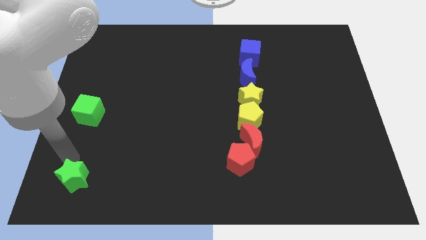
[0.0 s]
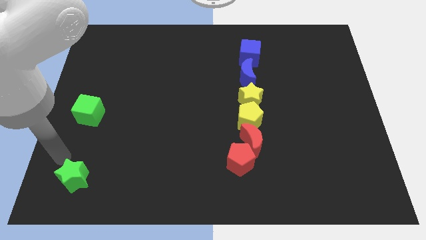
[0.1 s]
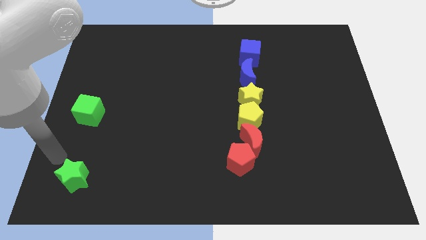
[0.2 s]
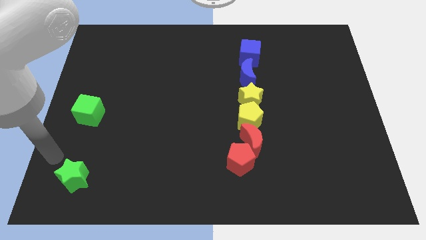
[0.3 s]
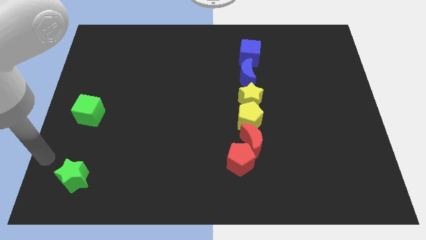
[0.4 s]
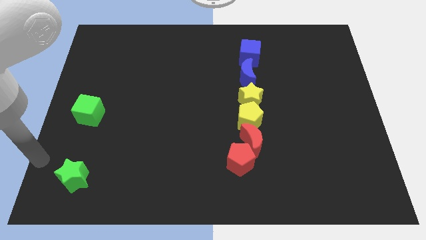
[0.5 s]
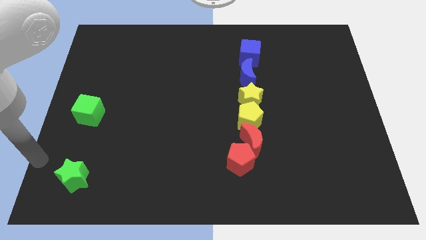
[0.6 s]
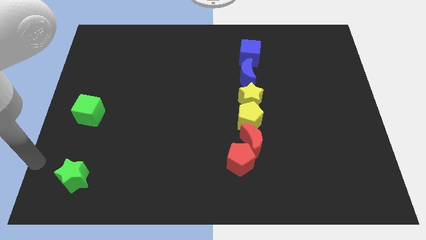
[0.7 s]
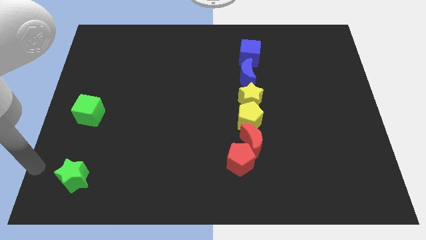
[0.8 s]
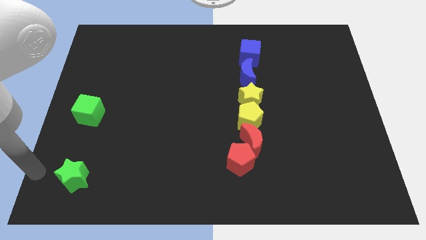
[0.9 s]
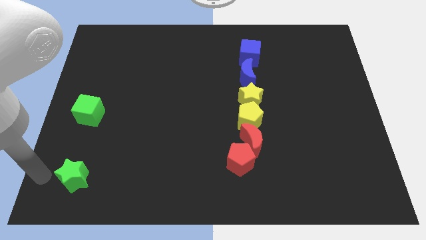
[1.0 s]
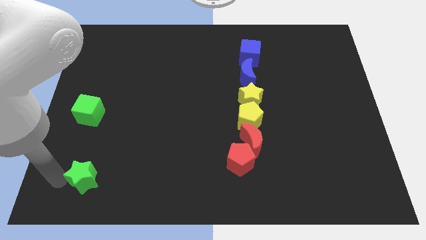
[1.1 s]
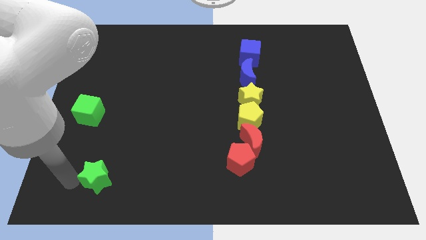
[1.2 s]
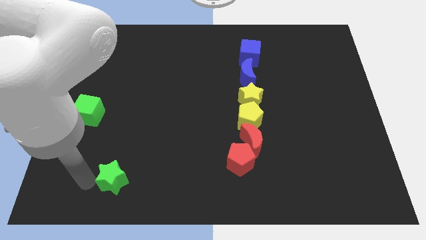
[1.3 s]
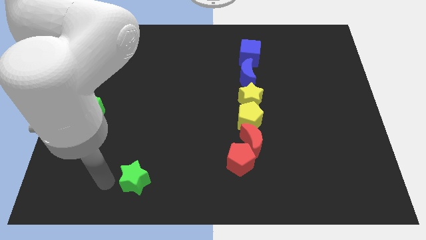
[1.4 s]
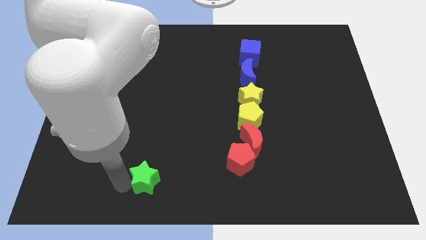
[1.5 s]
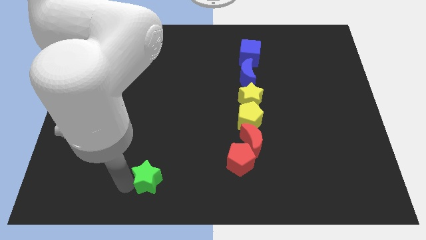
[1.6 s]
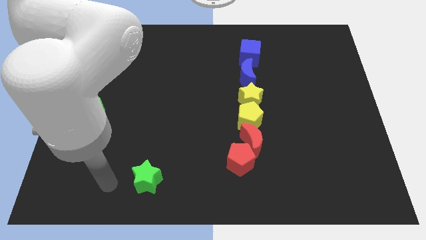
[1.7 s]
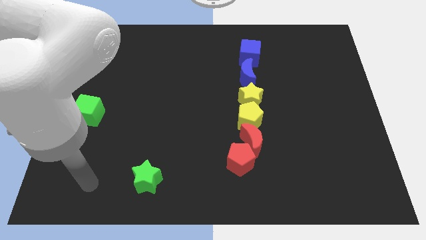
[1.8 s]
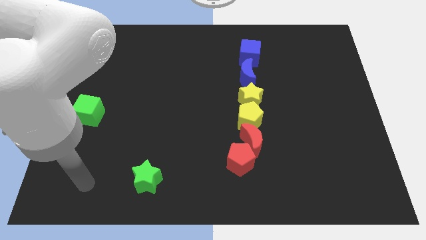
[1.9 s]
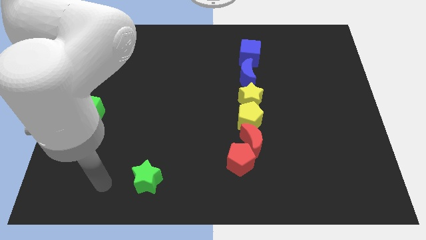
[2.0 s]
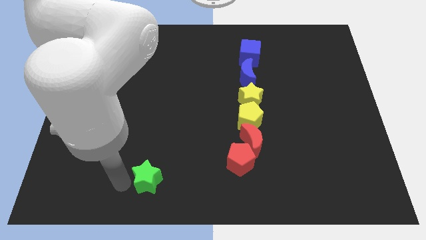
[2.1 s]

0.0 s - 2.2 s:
move the green sar to the bottom center

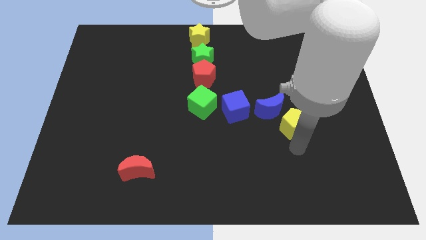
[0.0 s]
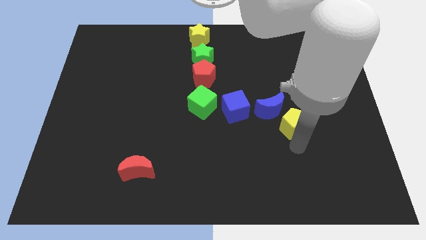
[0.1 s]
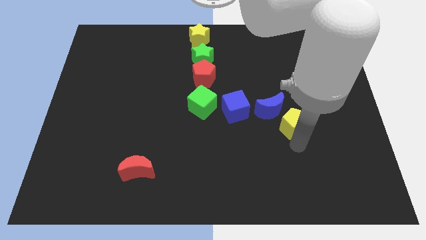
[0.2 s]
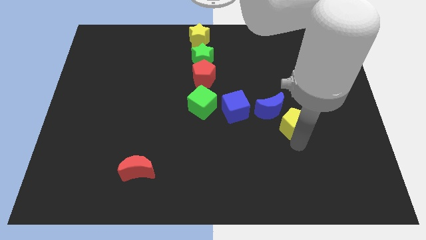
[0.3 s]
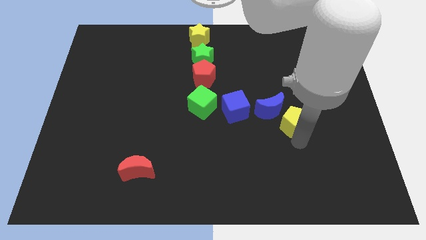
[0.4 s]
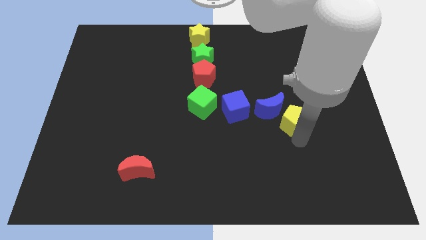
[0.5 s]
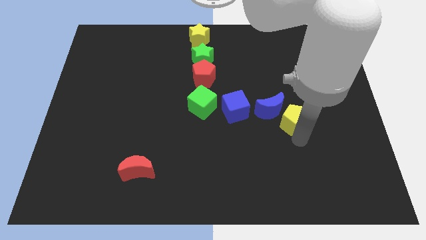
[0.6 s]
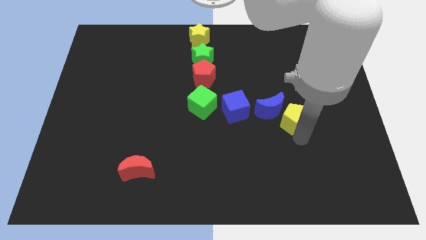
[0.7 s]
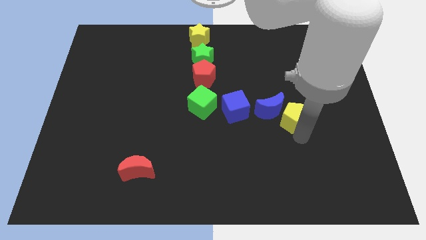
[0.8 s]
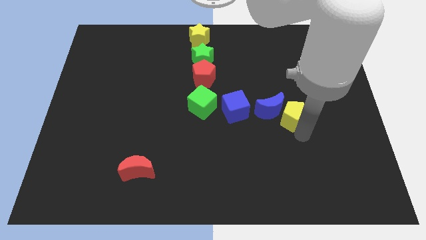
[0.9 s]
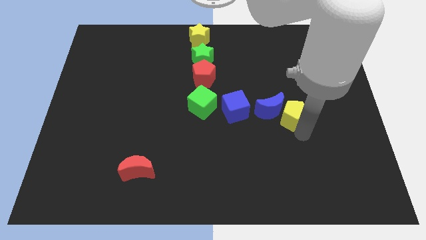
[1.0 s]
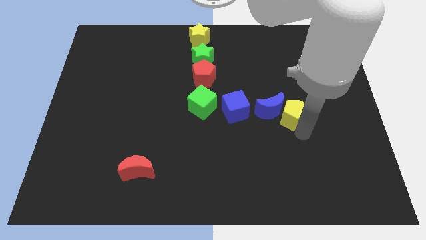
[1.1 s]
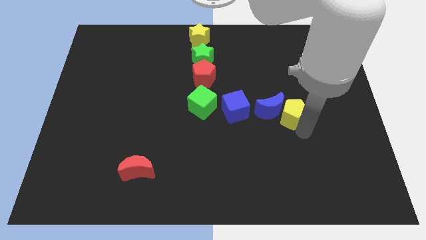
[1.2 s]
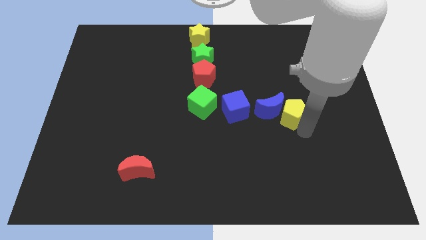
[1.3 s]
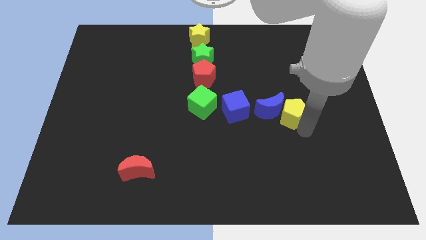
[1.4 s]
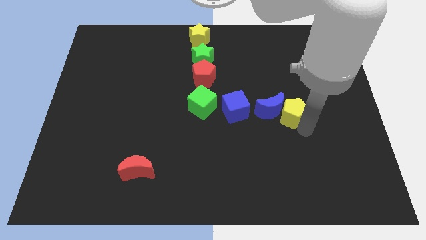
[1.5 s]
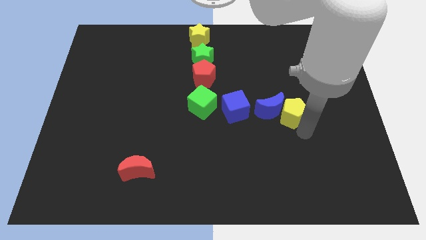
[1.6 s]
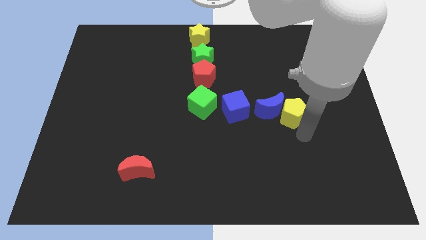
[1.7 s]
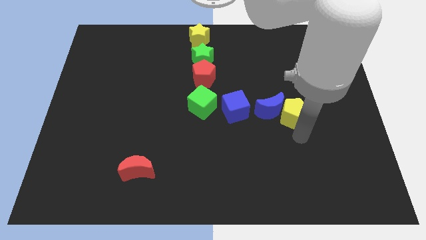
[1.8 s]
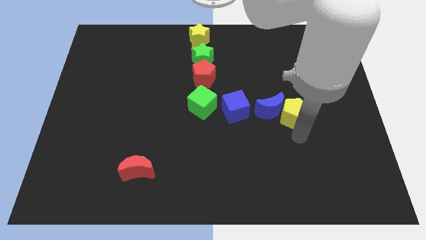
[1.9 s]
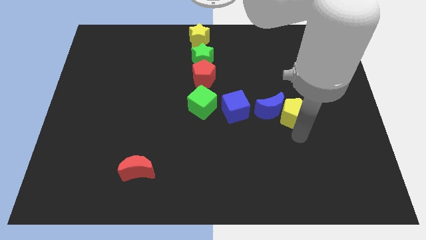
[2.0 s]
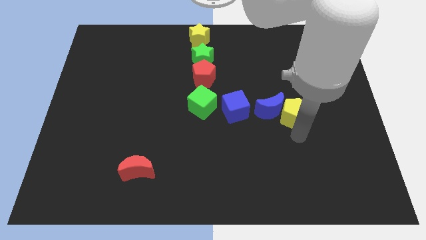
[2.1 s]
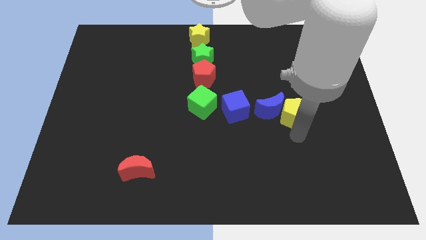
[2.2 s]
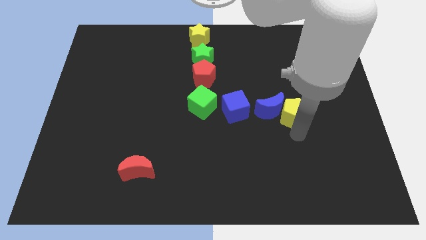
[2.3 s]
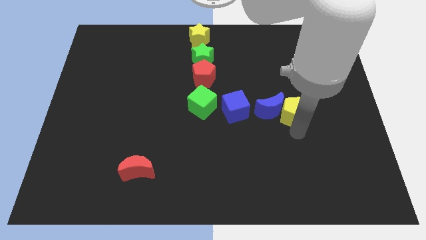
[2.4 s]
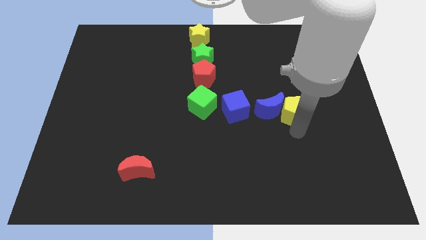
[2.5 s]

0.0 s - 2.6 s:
place the yellow pentagon to the right side of blue crescent

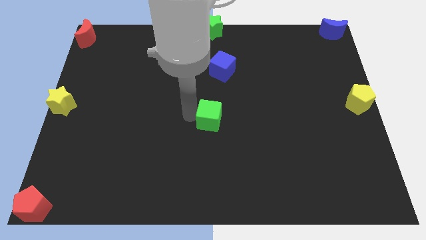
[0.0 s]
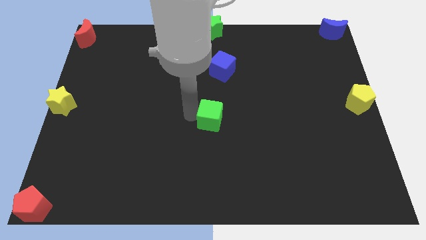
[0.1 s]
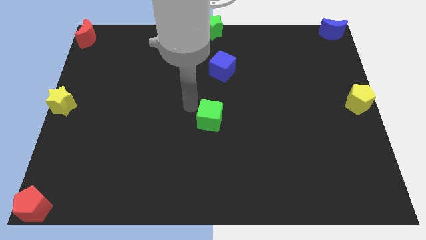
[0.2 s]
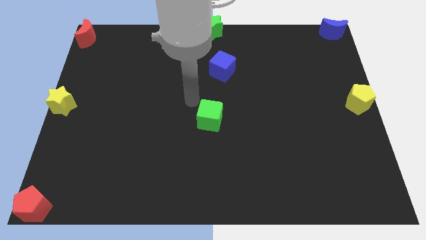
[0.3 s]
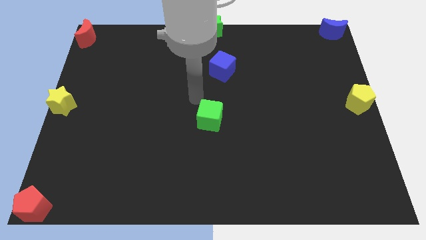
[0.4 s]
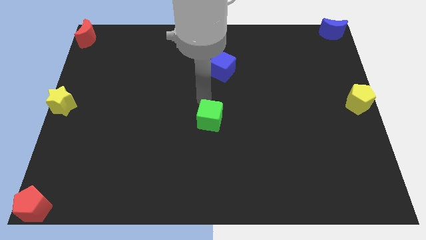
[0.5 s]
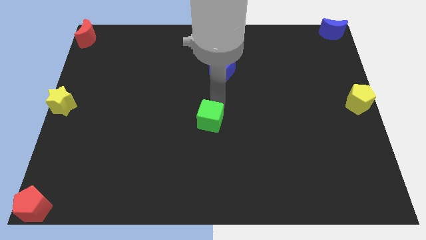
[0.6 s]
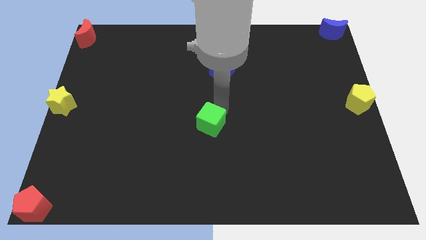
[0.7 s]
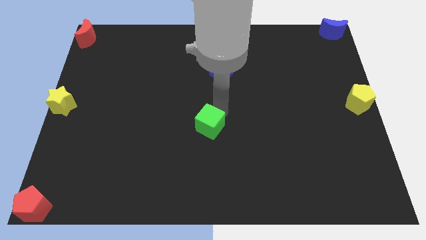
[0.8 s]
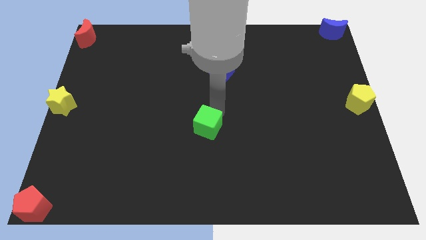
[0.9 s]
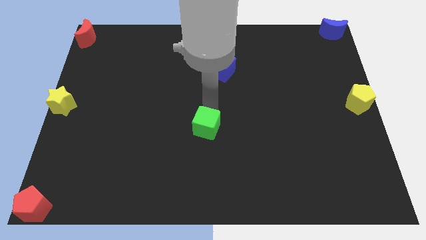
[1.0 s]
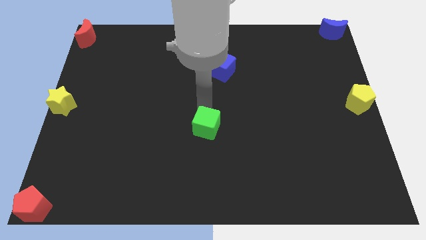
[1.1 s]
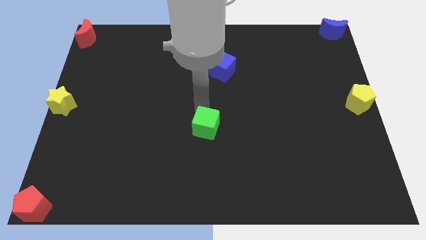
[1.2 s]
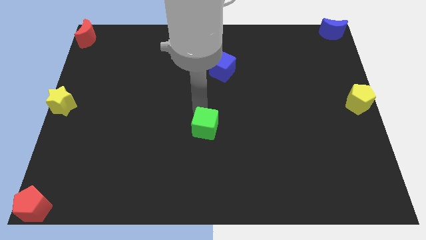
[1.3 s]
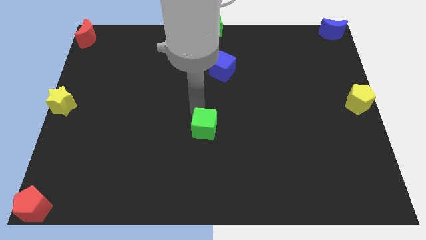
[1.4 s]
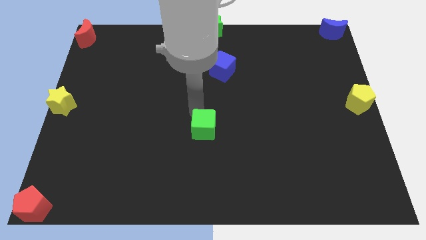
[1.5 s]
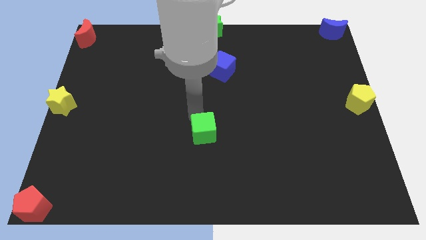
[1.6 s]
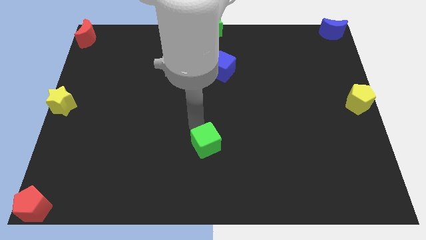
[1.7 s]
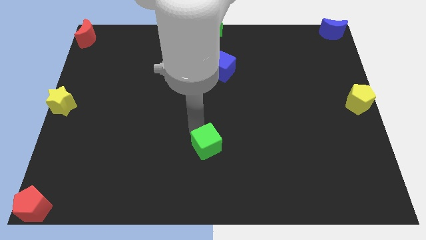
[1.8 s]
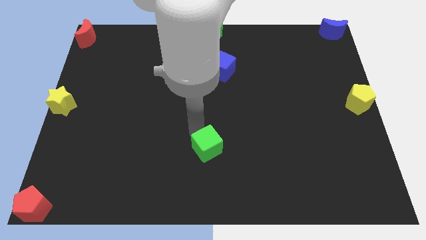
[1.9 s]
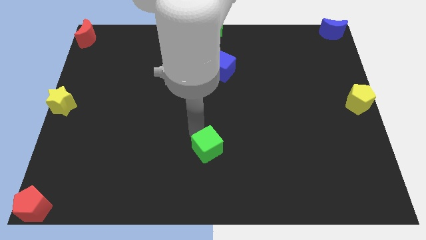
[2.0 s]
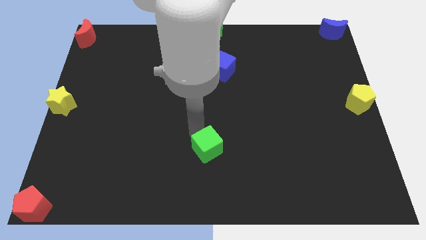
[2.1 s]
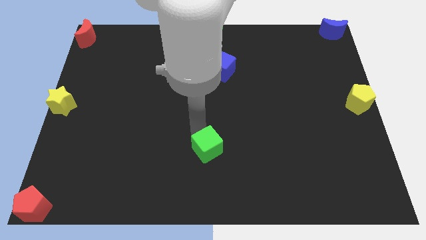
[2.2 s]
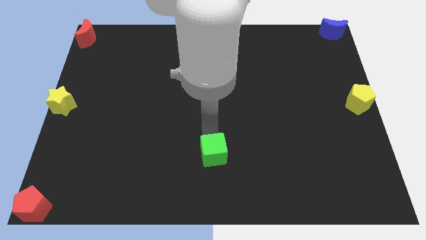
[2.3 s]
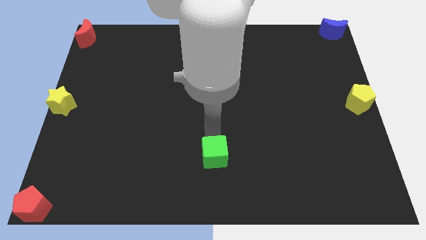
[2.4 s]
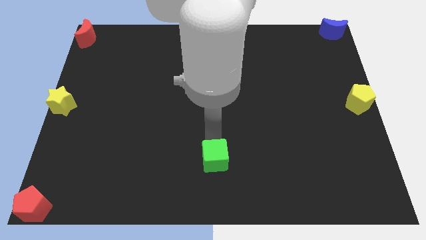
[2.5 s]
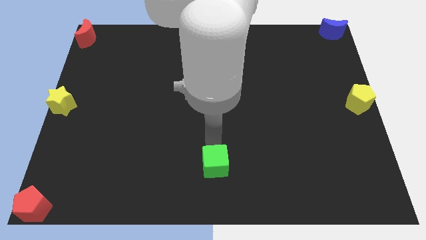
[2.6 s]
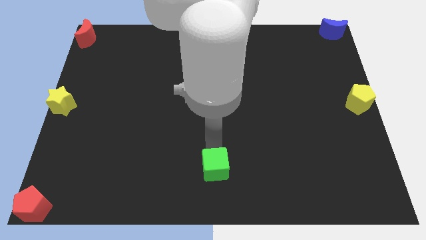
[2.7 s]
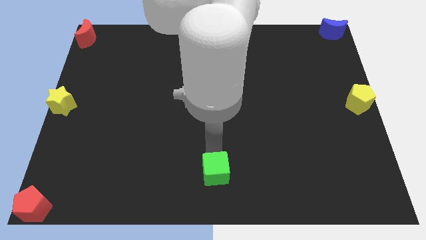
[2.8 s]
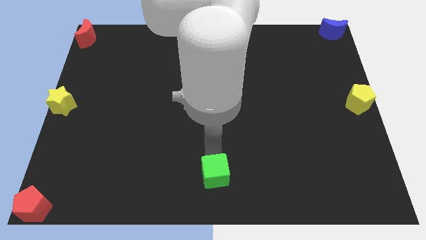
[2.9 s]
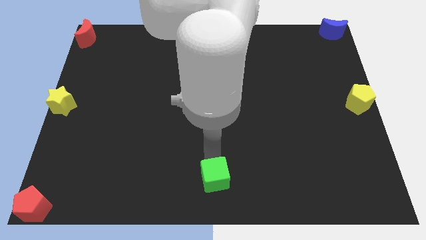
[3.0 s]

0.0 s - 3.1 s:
drag green cube downwards to the bottom middle

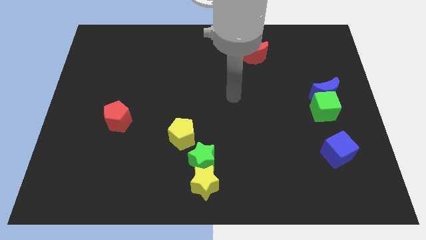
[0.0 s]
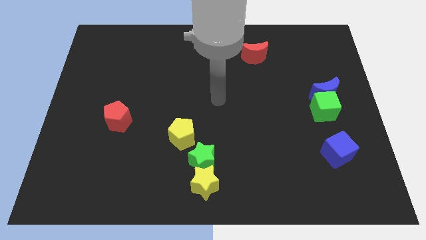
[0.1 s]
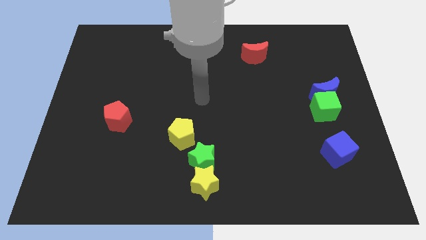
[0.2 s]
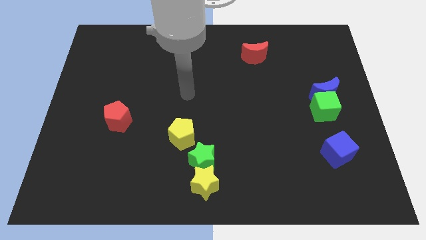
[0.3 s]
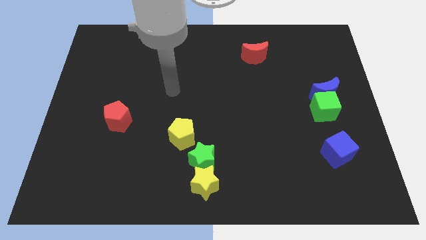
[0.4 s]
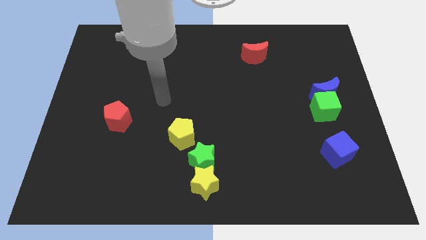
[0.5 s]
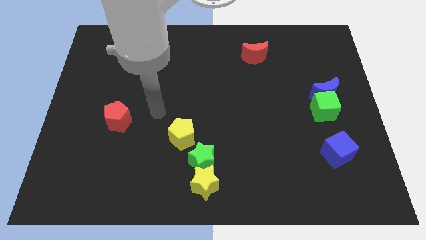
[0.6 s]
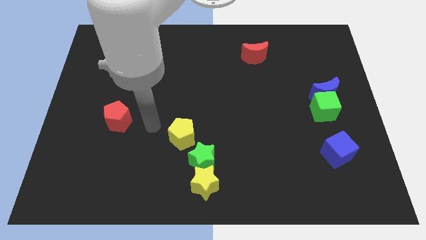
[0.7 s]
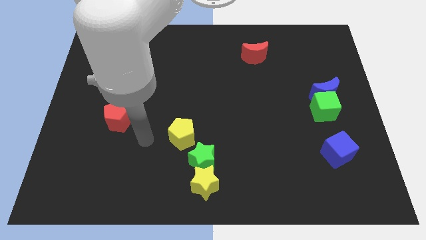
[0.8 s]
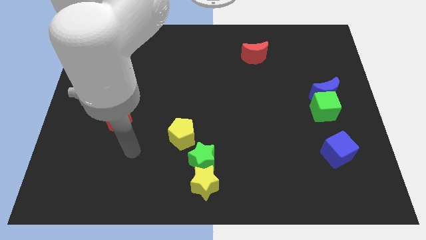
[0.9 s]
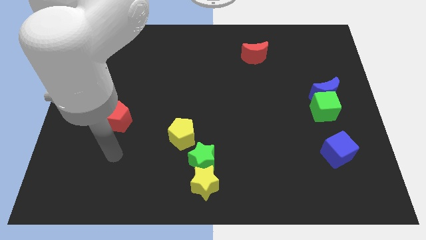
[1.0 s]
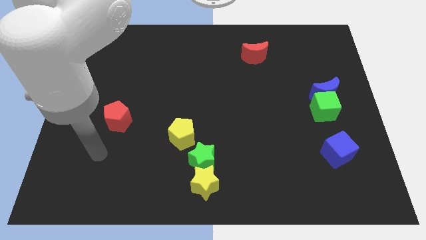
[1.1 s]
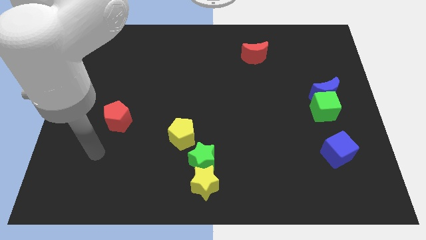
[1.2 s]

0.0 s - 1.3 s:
point your arm at the bottom side of the red pentagon

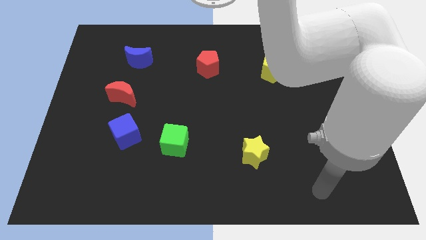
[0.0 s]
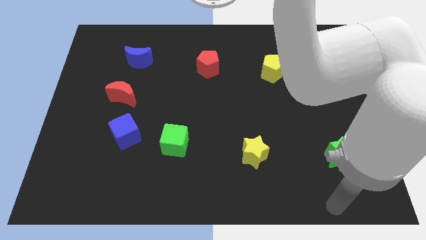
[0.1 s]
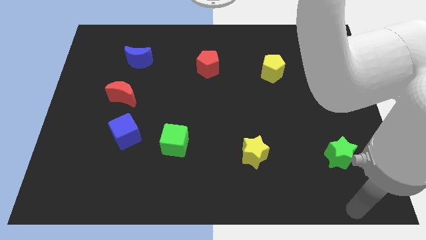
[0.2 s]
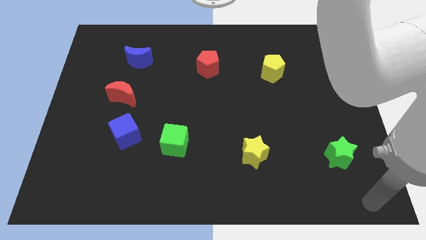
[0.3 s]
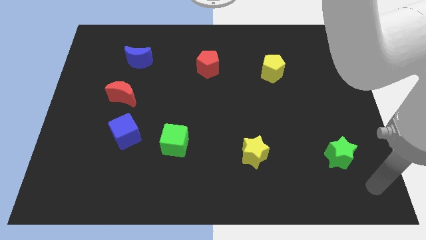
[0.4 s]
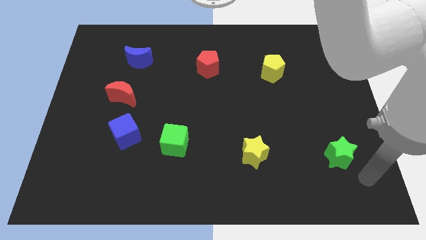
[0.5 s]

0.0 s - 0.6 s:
place arm close to green star
